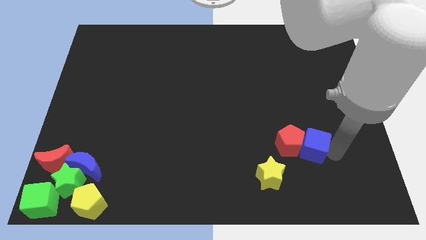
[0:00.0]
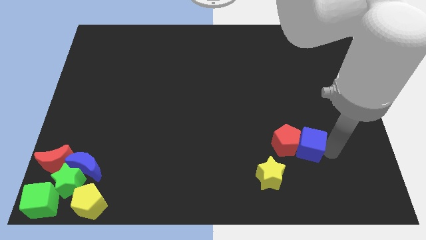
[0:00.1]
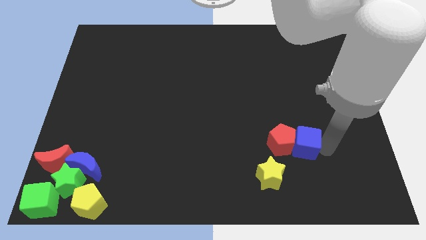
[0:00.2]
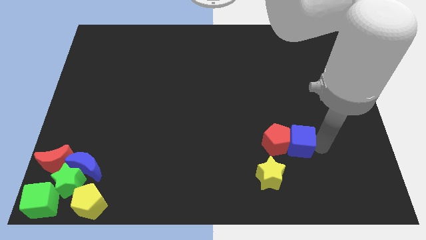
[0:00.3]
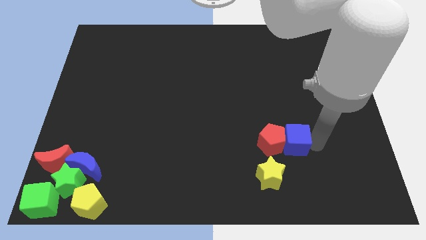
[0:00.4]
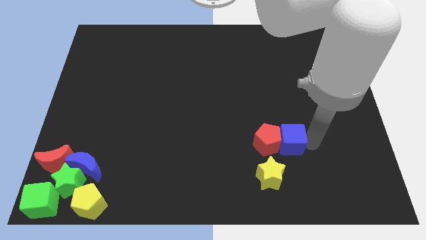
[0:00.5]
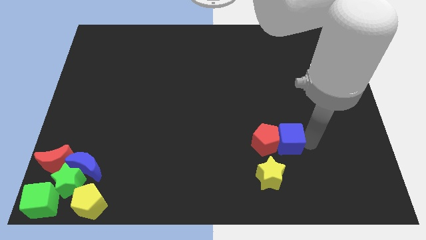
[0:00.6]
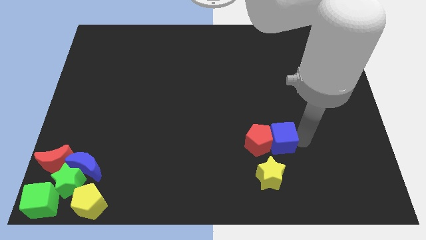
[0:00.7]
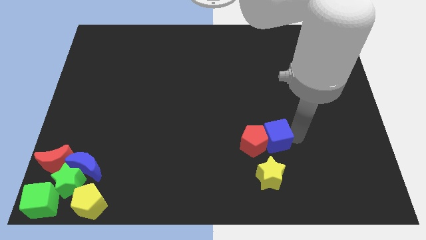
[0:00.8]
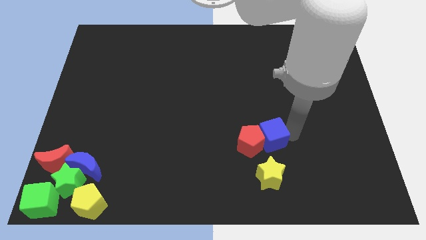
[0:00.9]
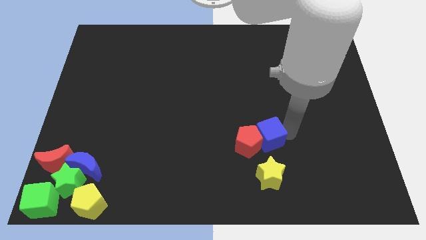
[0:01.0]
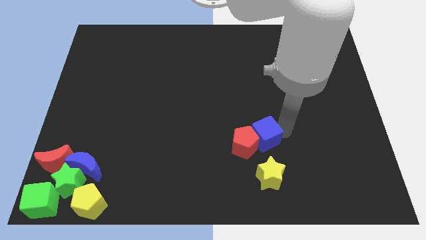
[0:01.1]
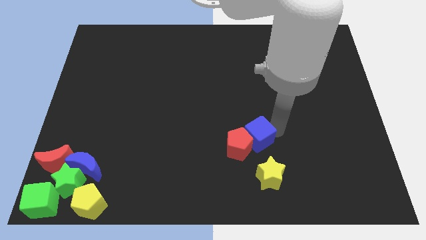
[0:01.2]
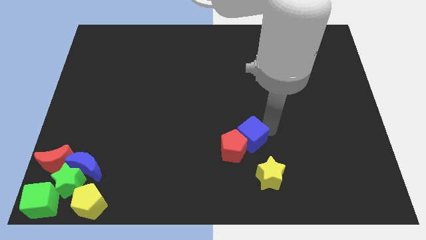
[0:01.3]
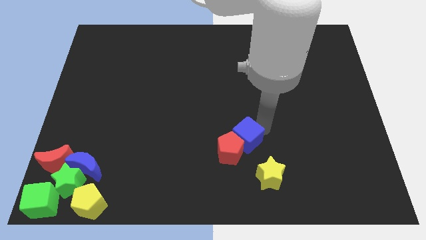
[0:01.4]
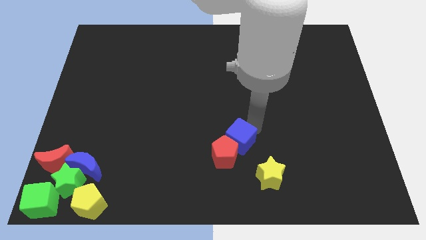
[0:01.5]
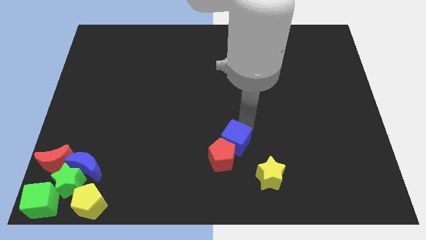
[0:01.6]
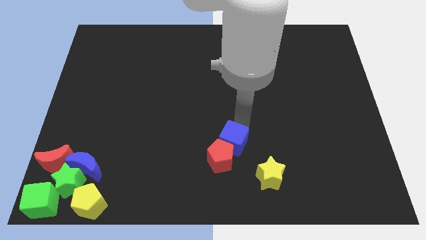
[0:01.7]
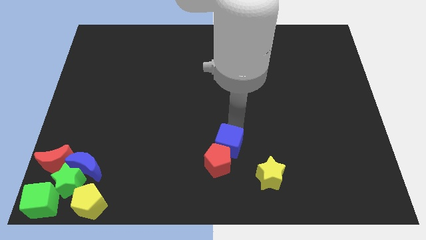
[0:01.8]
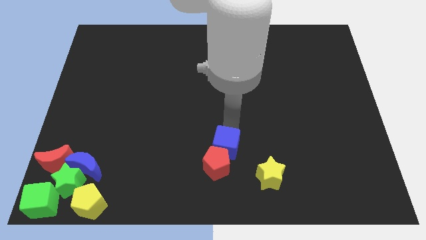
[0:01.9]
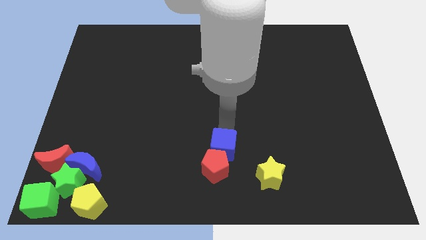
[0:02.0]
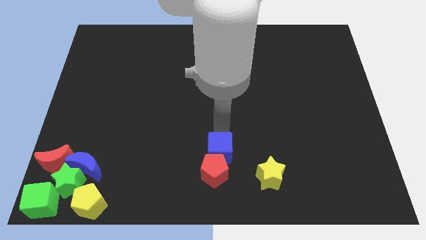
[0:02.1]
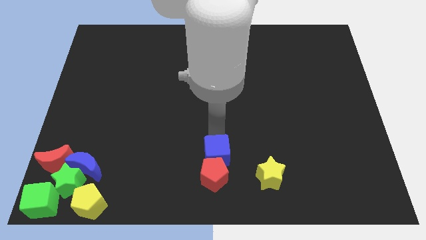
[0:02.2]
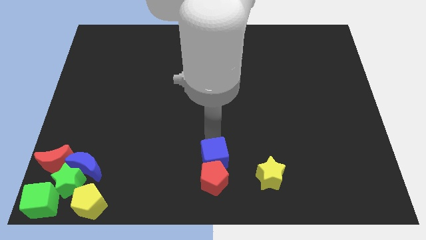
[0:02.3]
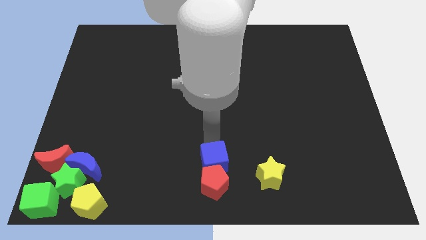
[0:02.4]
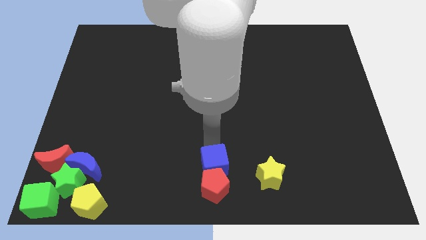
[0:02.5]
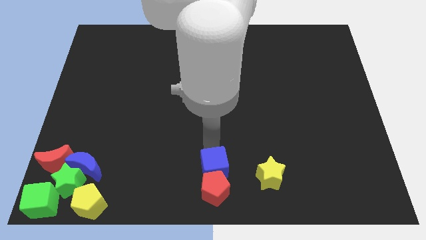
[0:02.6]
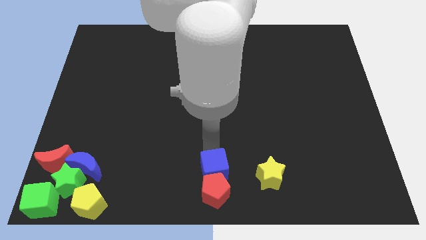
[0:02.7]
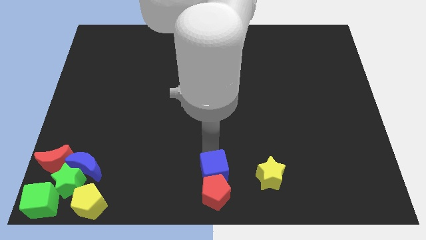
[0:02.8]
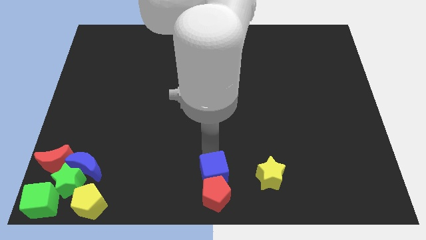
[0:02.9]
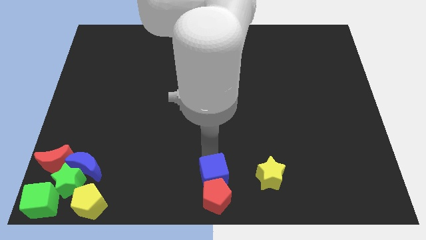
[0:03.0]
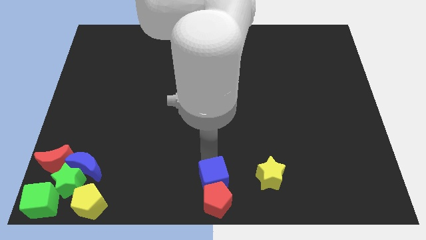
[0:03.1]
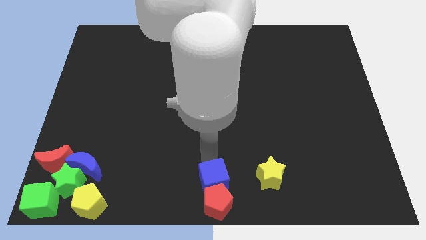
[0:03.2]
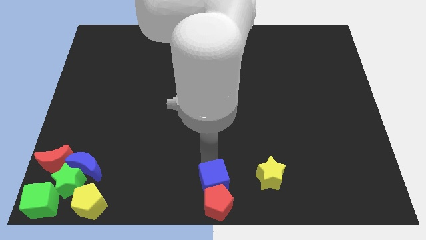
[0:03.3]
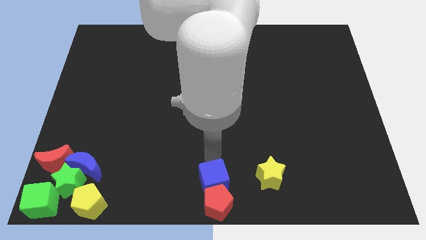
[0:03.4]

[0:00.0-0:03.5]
push the blue cube to the left side of the yellow star

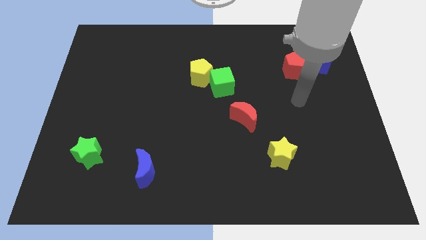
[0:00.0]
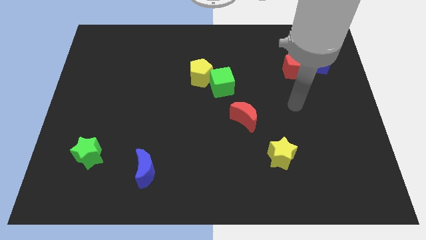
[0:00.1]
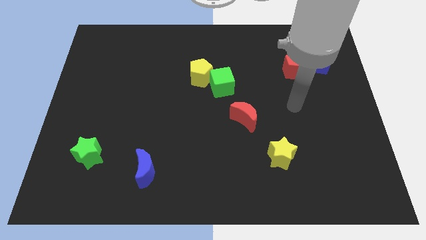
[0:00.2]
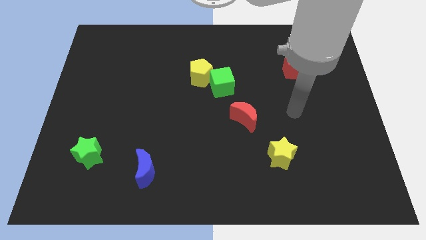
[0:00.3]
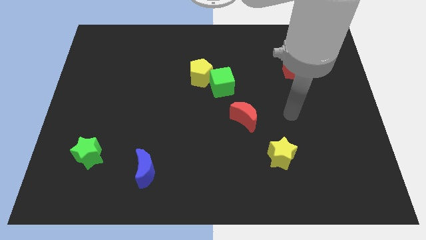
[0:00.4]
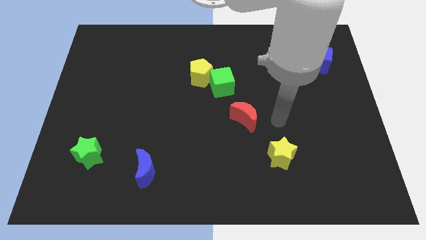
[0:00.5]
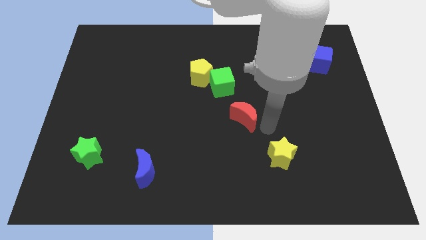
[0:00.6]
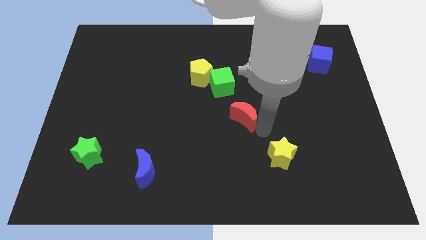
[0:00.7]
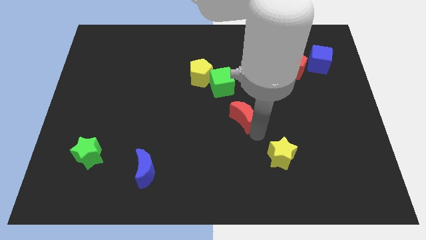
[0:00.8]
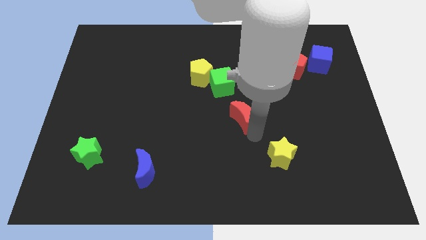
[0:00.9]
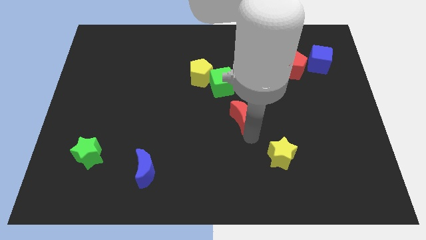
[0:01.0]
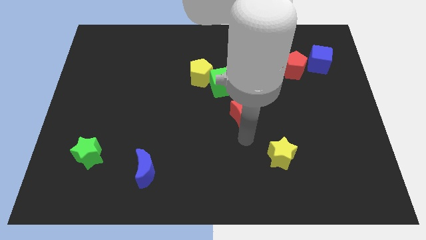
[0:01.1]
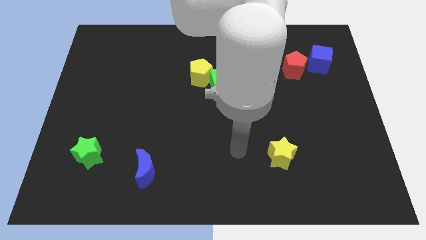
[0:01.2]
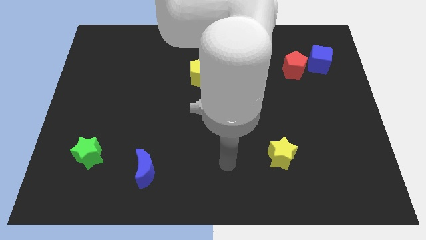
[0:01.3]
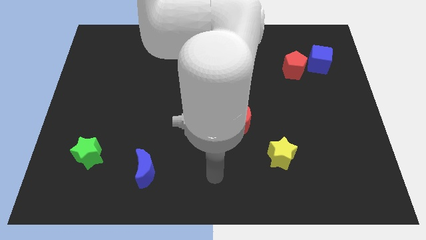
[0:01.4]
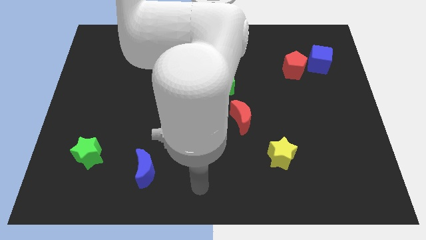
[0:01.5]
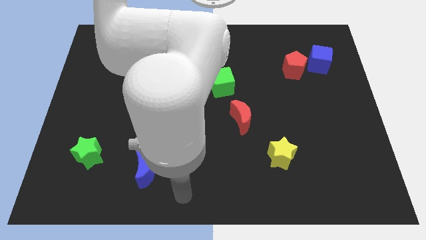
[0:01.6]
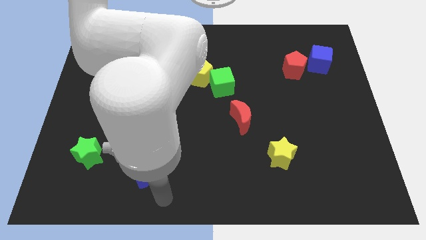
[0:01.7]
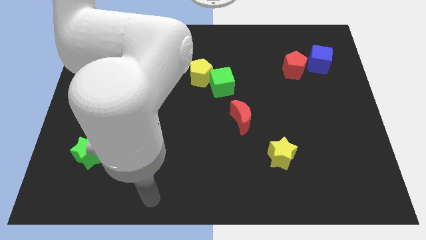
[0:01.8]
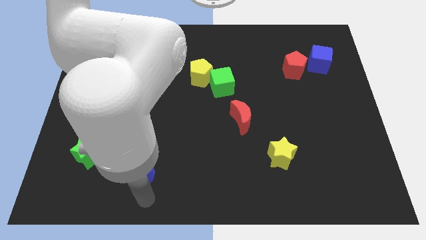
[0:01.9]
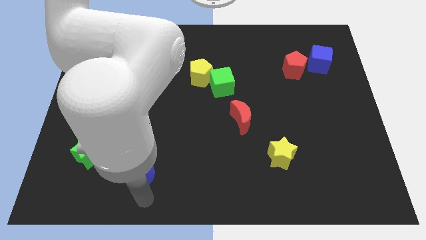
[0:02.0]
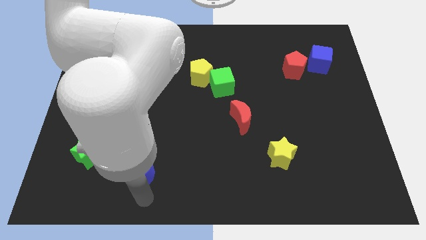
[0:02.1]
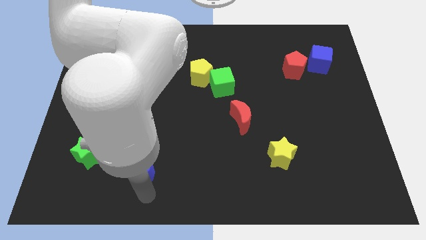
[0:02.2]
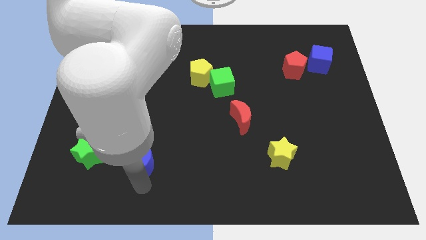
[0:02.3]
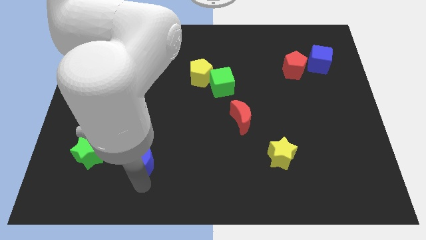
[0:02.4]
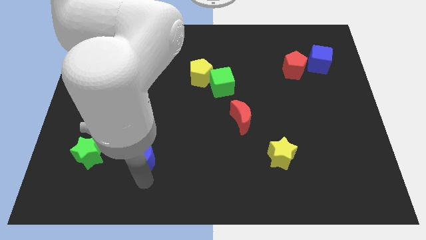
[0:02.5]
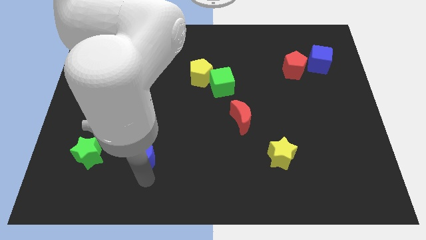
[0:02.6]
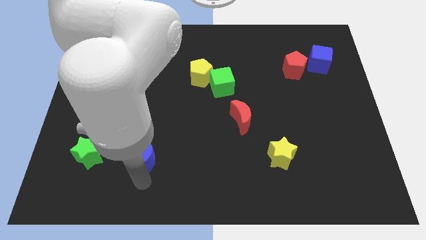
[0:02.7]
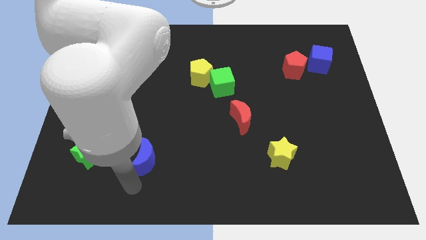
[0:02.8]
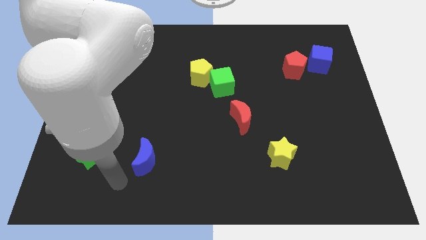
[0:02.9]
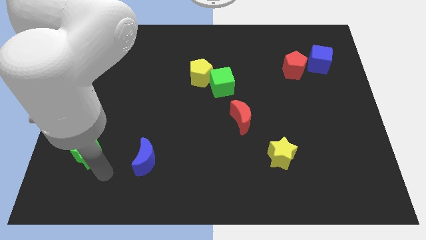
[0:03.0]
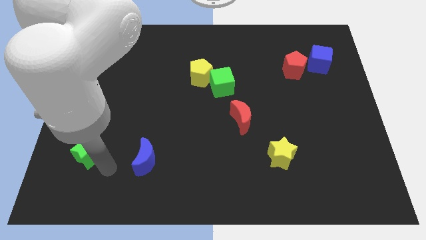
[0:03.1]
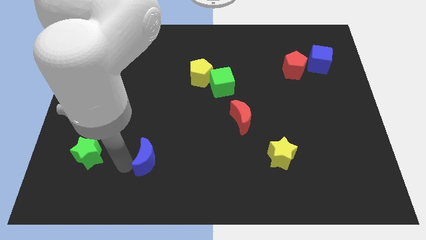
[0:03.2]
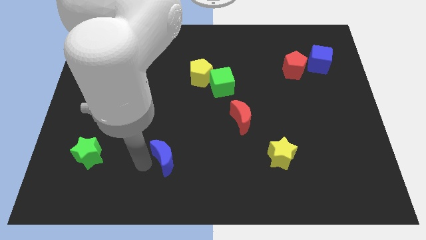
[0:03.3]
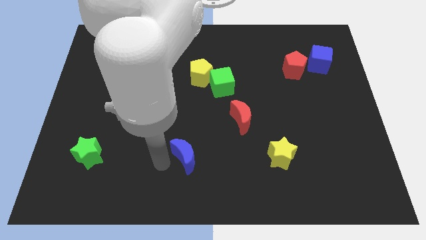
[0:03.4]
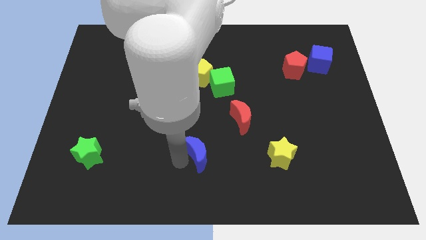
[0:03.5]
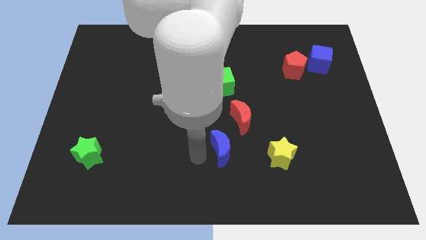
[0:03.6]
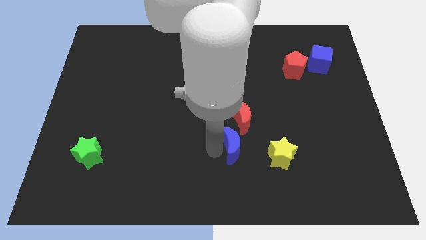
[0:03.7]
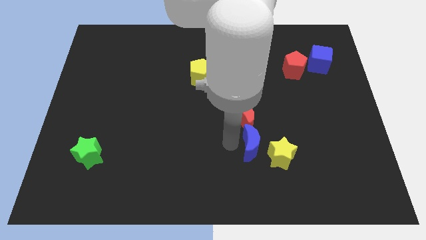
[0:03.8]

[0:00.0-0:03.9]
move the blue crescent close to the red crescent

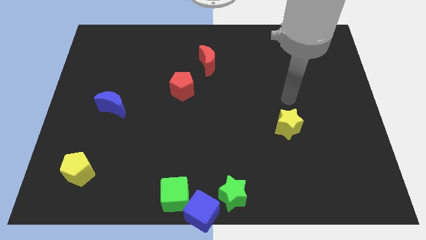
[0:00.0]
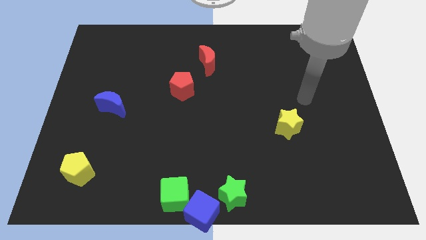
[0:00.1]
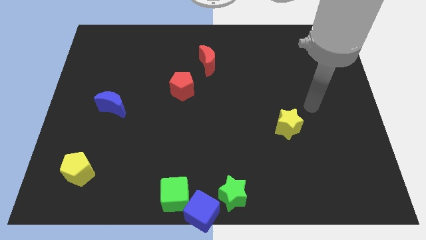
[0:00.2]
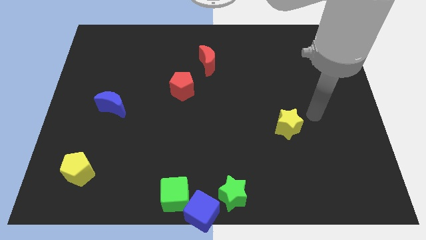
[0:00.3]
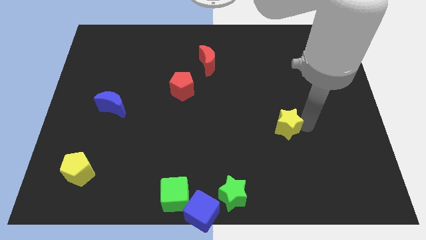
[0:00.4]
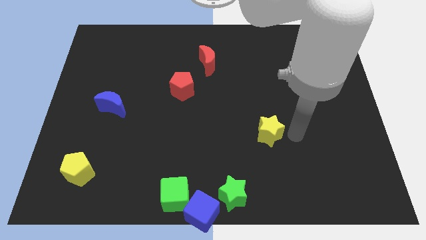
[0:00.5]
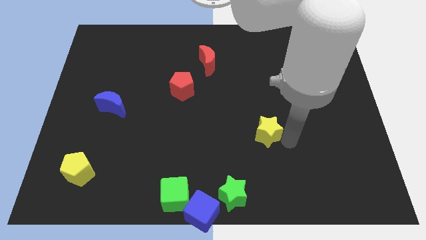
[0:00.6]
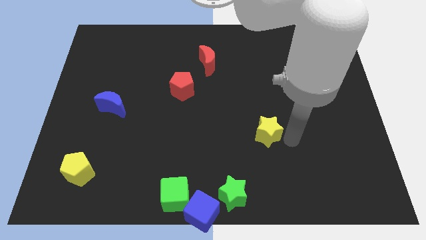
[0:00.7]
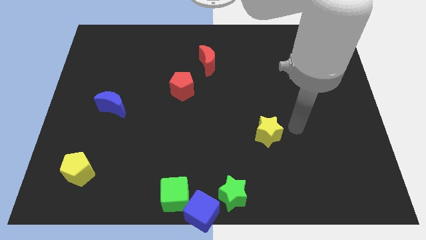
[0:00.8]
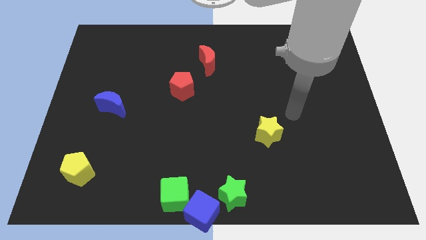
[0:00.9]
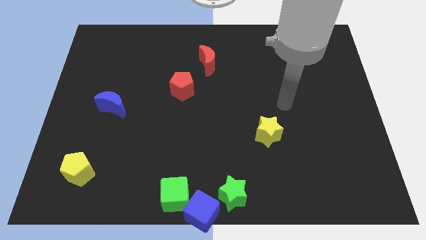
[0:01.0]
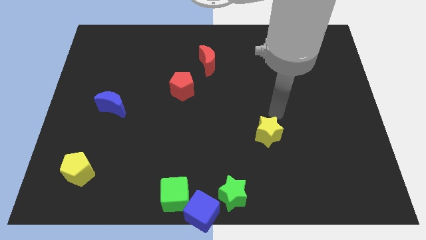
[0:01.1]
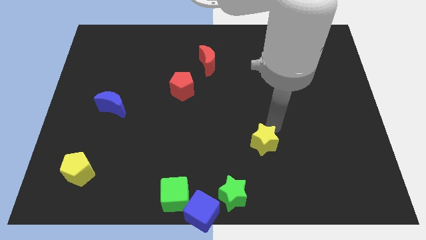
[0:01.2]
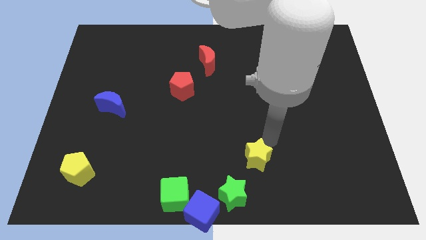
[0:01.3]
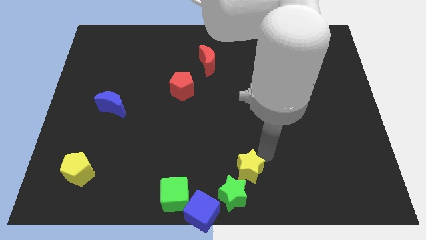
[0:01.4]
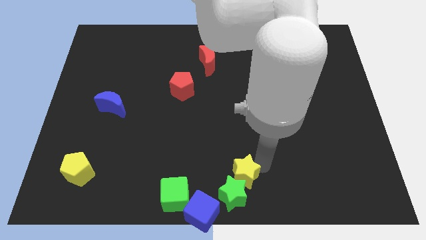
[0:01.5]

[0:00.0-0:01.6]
slide the yellow star to the top right side of the green star
